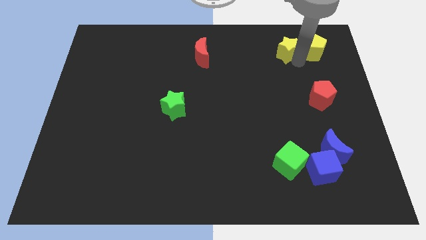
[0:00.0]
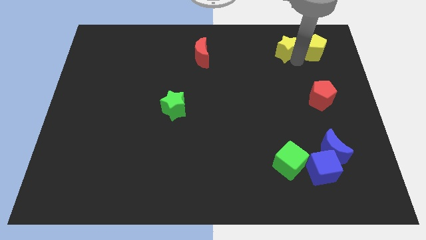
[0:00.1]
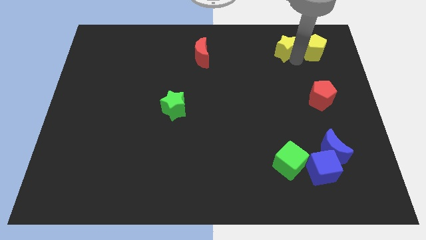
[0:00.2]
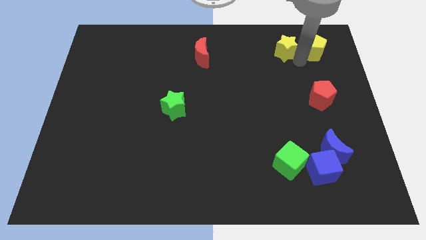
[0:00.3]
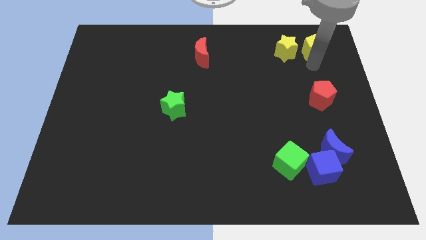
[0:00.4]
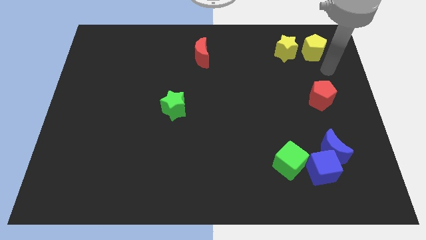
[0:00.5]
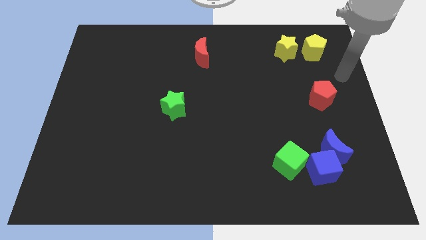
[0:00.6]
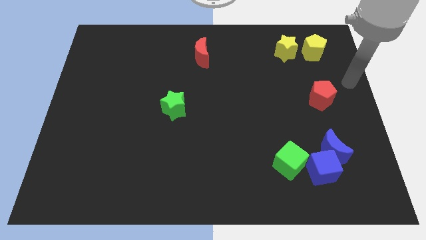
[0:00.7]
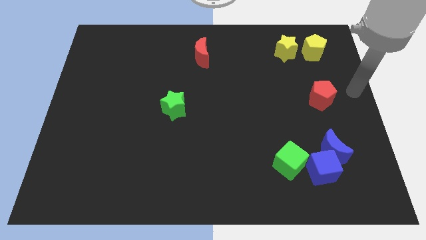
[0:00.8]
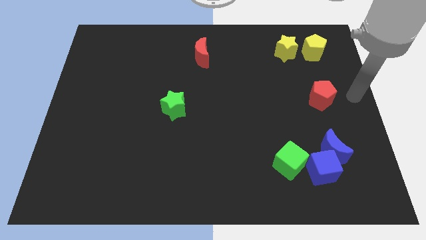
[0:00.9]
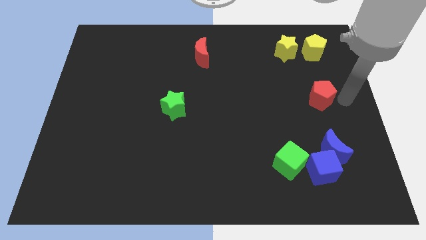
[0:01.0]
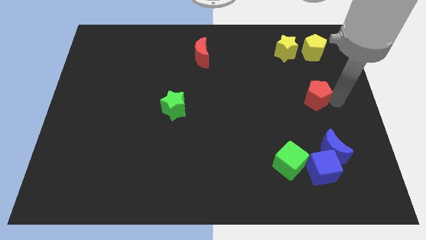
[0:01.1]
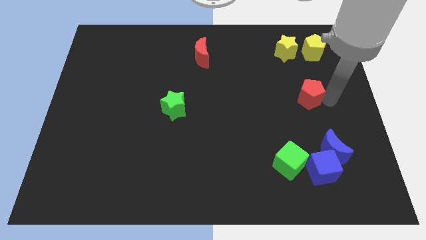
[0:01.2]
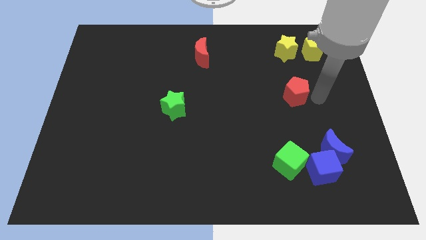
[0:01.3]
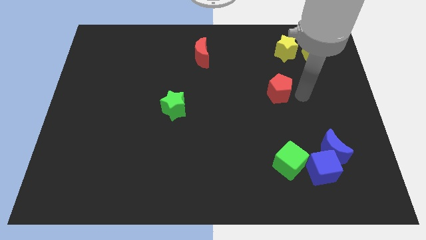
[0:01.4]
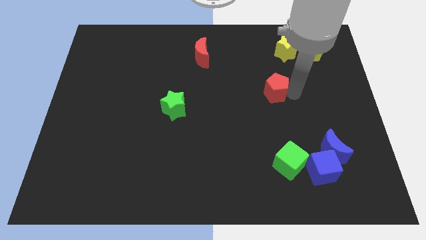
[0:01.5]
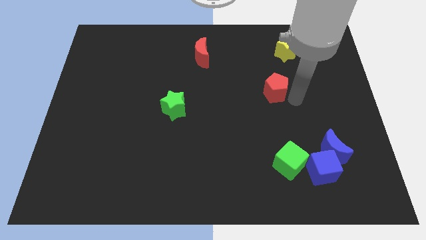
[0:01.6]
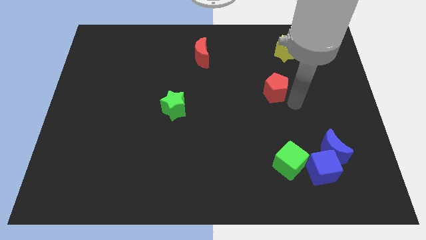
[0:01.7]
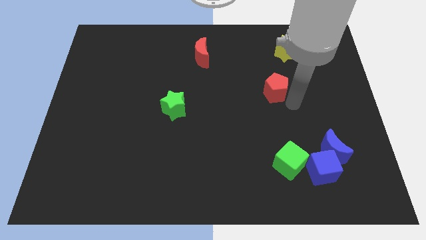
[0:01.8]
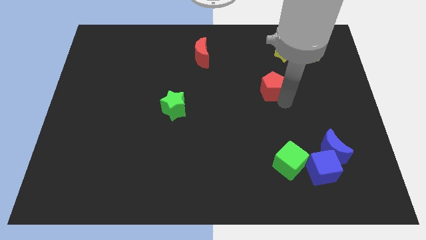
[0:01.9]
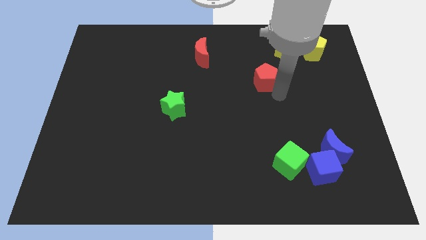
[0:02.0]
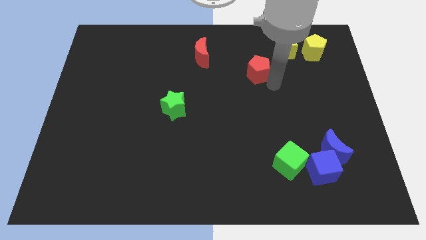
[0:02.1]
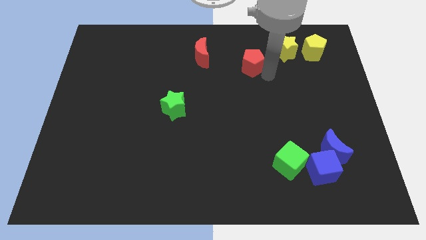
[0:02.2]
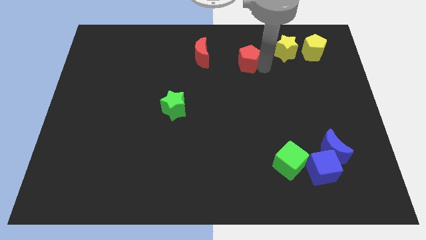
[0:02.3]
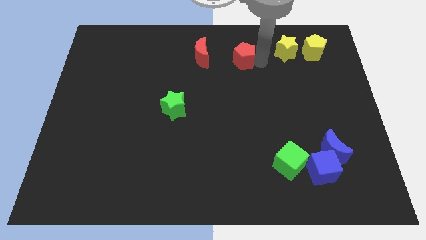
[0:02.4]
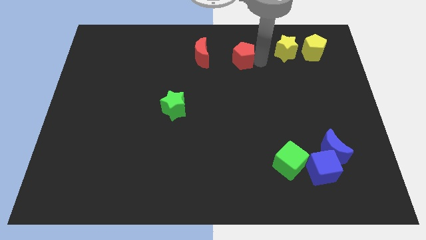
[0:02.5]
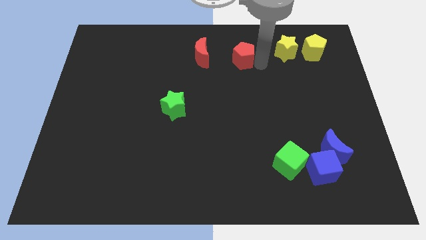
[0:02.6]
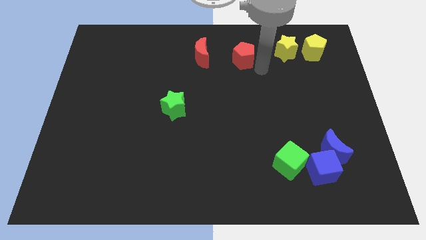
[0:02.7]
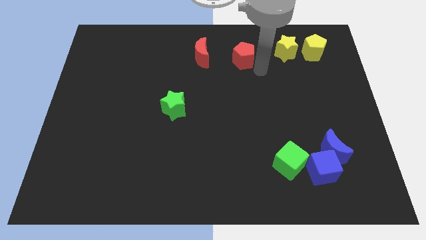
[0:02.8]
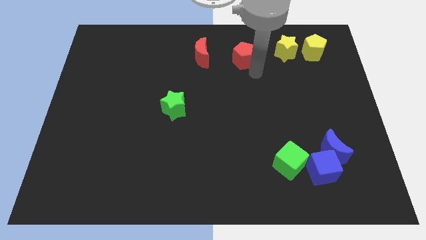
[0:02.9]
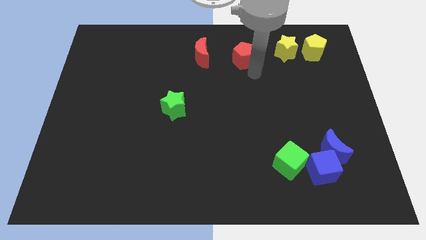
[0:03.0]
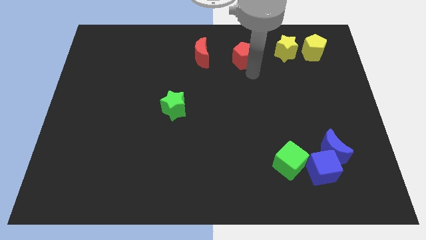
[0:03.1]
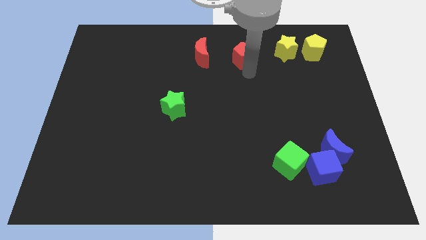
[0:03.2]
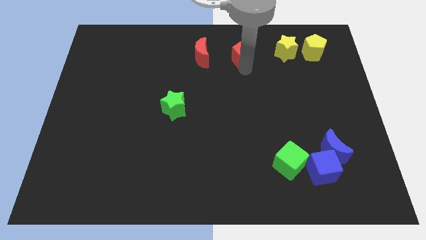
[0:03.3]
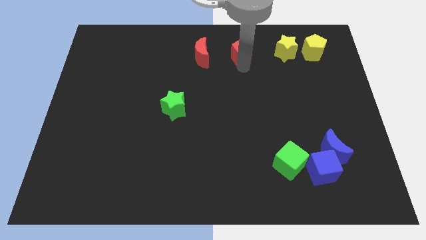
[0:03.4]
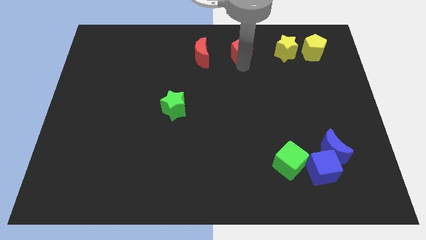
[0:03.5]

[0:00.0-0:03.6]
place red pentagon to the right of red moon
